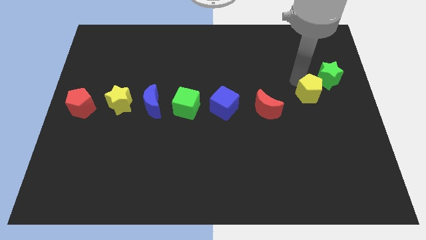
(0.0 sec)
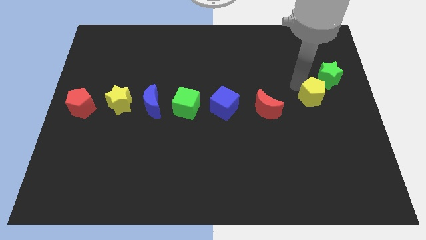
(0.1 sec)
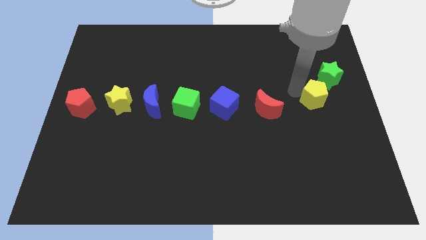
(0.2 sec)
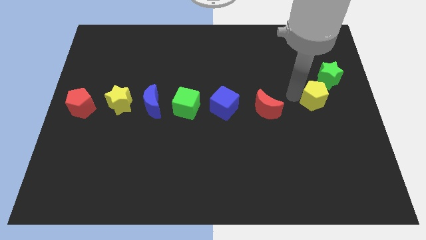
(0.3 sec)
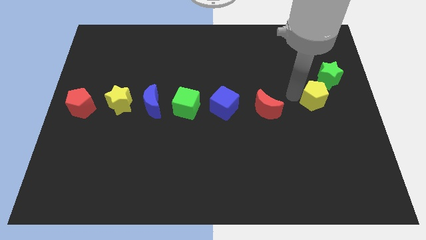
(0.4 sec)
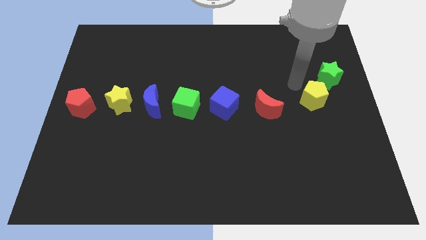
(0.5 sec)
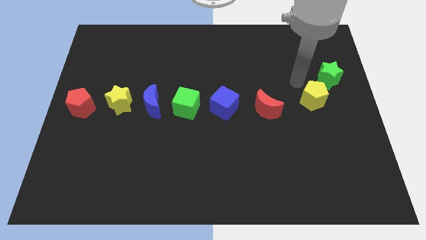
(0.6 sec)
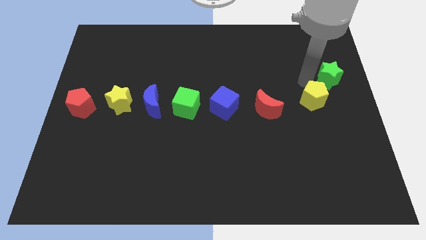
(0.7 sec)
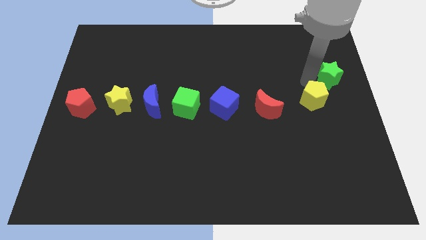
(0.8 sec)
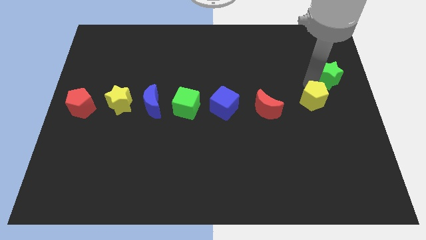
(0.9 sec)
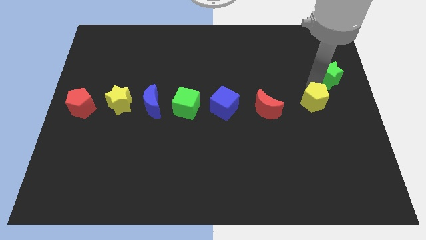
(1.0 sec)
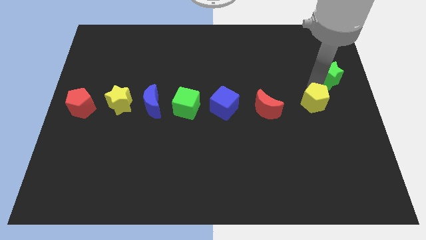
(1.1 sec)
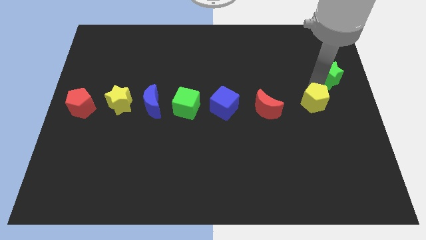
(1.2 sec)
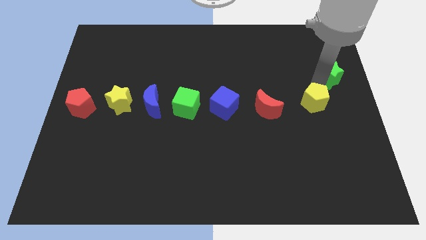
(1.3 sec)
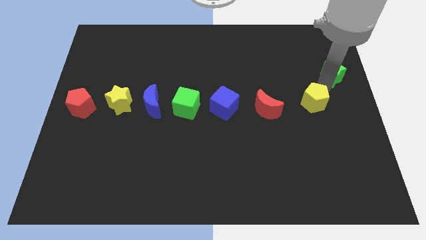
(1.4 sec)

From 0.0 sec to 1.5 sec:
place the yellow pentagon to the right side of red moon

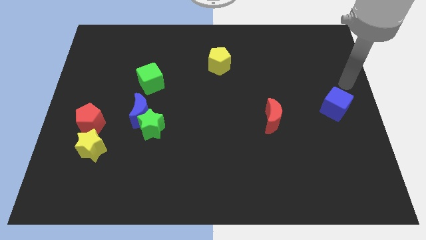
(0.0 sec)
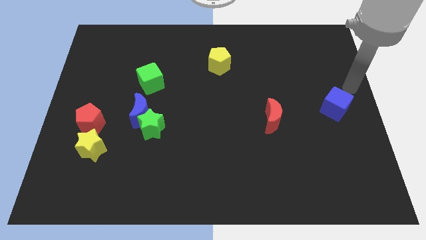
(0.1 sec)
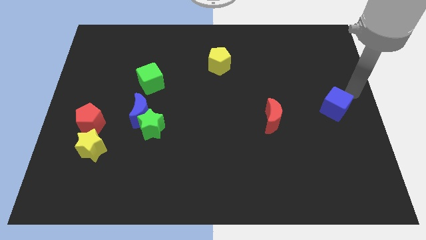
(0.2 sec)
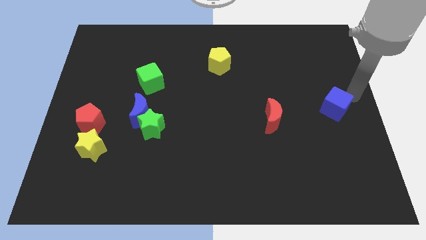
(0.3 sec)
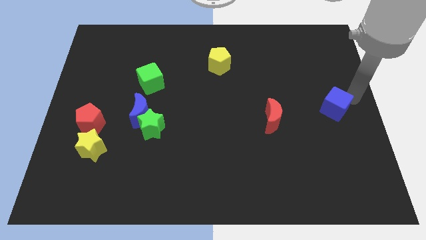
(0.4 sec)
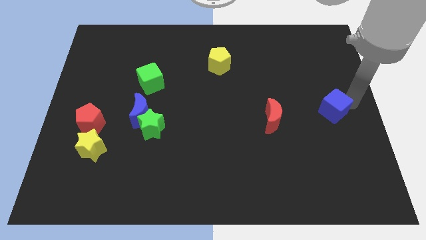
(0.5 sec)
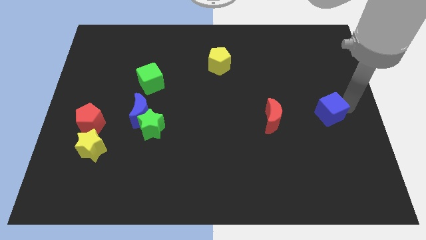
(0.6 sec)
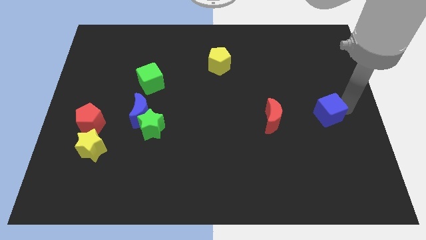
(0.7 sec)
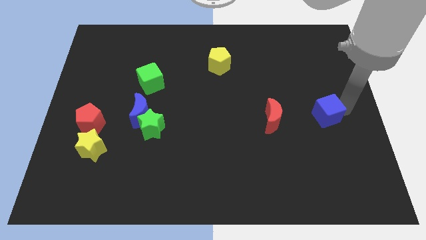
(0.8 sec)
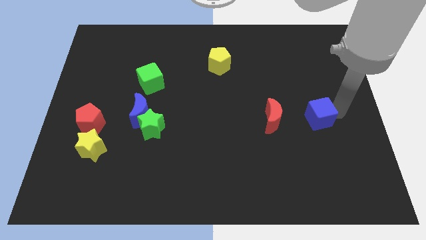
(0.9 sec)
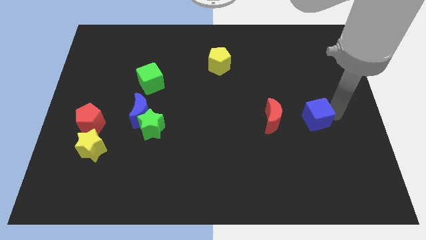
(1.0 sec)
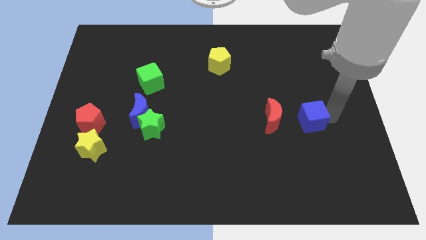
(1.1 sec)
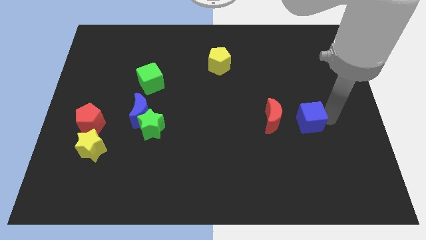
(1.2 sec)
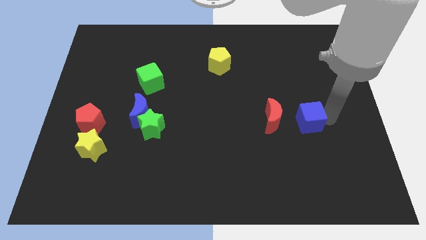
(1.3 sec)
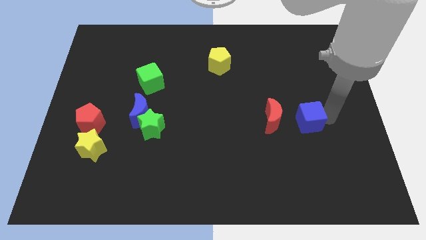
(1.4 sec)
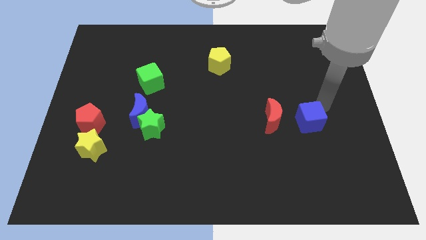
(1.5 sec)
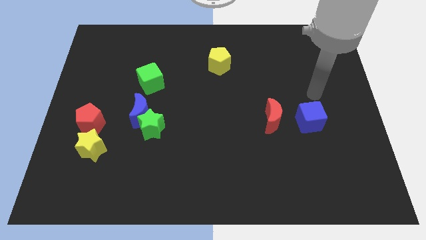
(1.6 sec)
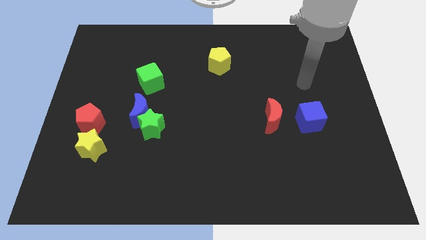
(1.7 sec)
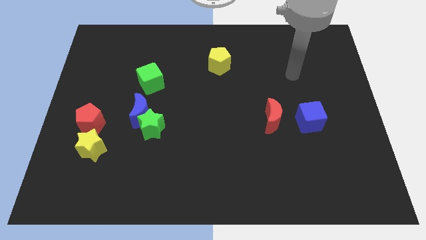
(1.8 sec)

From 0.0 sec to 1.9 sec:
move the blue cube at the right side of the red moon

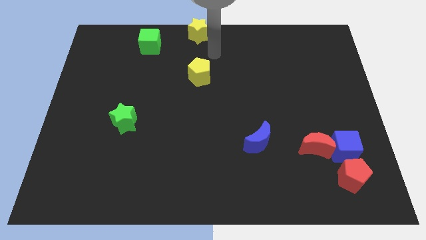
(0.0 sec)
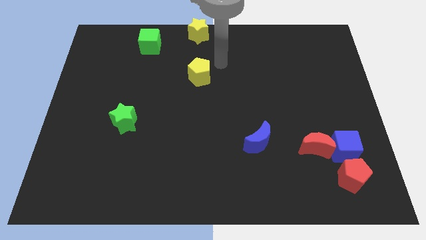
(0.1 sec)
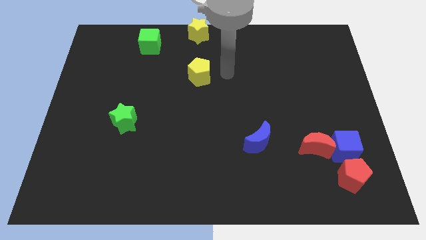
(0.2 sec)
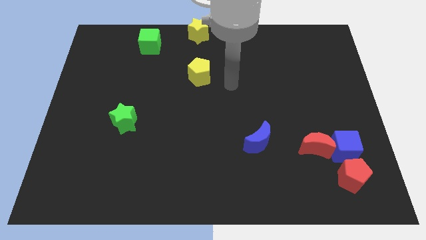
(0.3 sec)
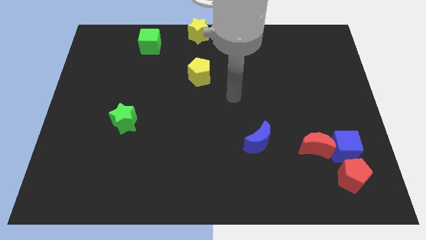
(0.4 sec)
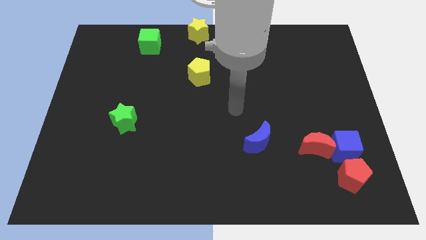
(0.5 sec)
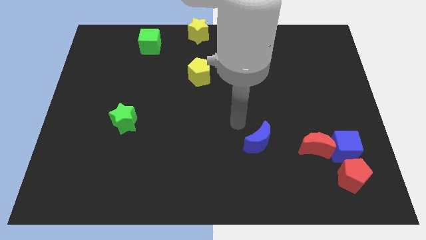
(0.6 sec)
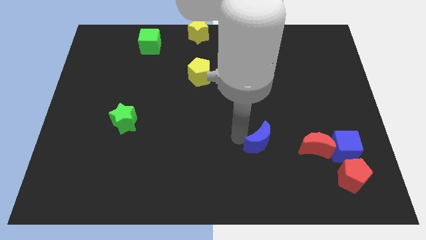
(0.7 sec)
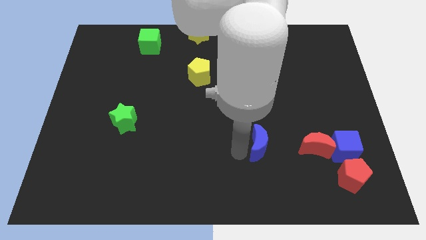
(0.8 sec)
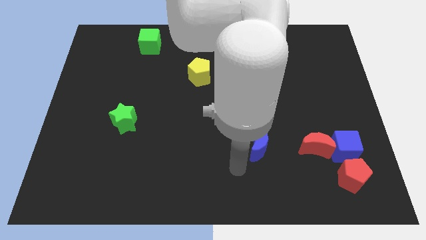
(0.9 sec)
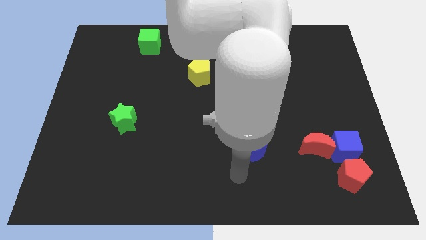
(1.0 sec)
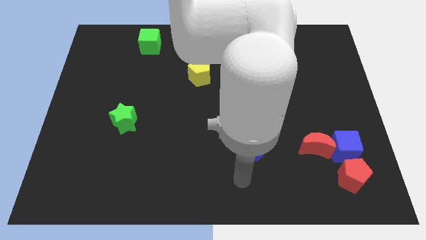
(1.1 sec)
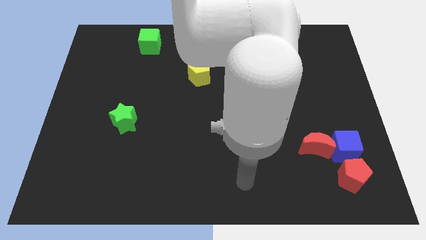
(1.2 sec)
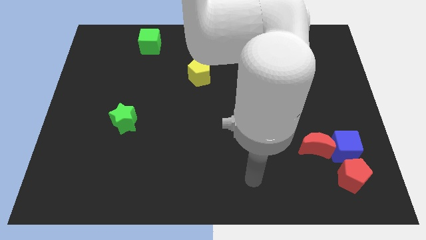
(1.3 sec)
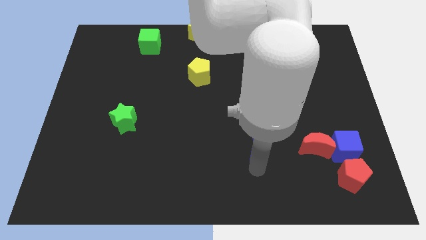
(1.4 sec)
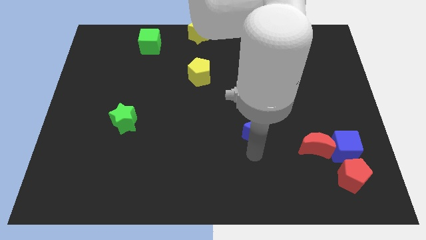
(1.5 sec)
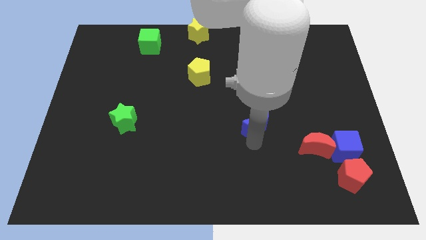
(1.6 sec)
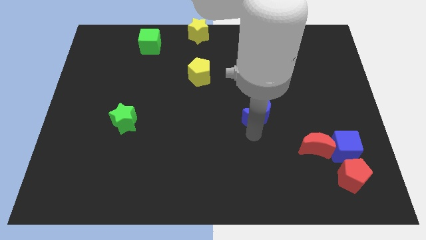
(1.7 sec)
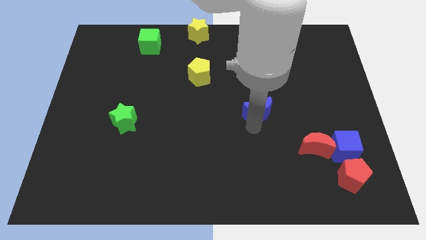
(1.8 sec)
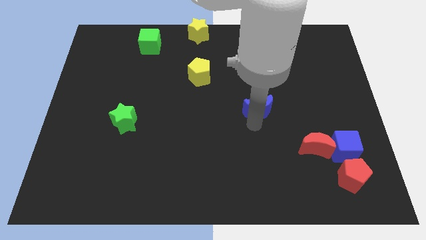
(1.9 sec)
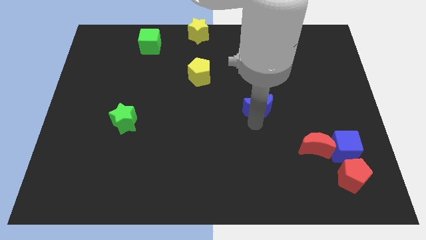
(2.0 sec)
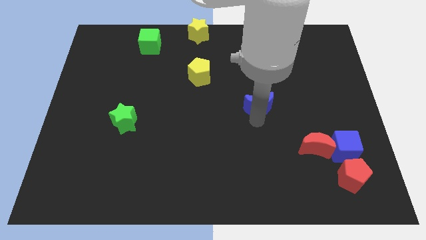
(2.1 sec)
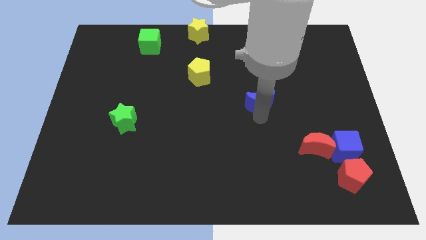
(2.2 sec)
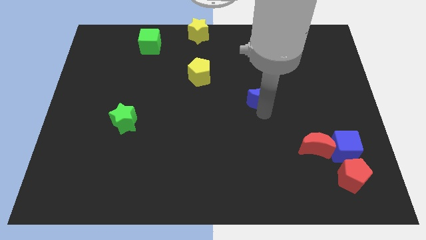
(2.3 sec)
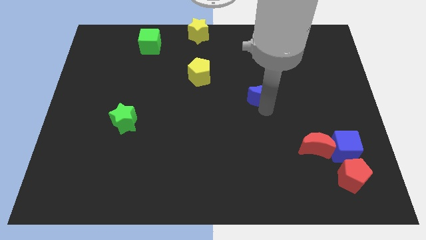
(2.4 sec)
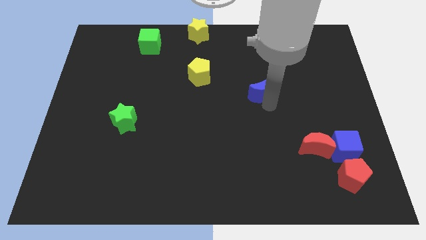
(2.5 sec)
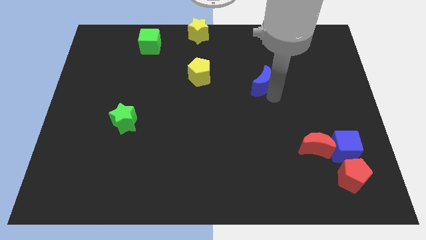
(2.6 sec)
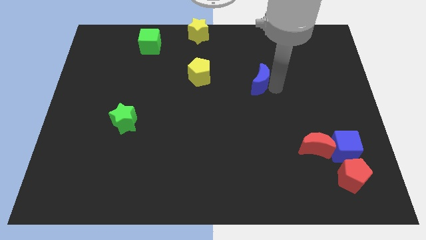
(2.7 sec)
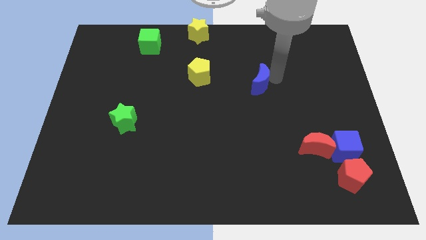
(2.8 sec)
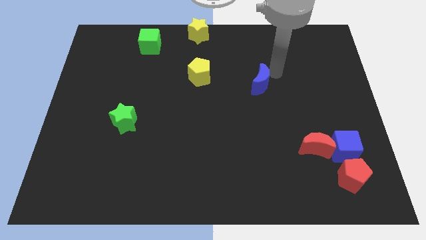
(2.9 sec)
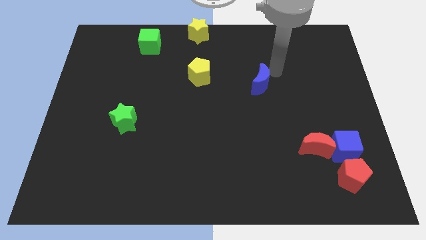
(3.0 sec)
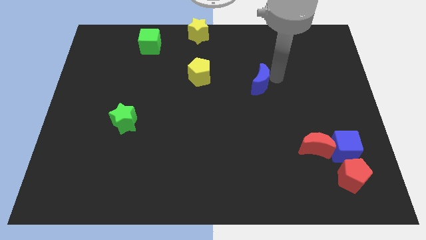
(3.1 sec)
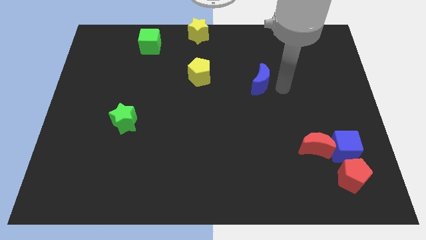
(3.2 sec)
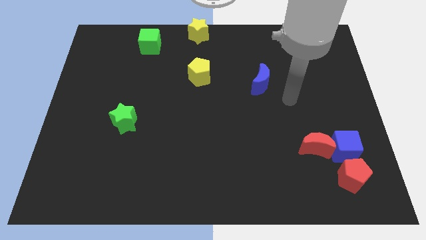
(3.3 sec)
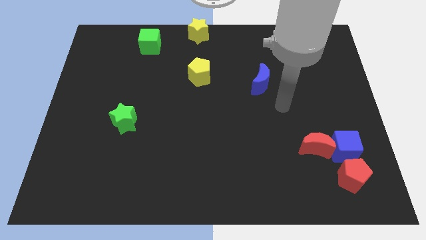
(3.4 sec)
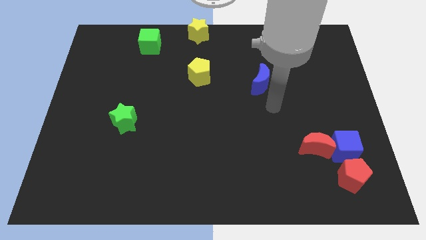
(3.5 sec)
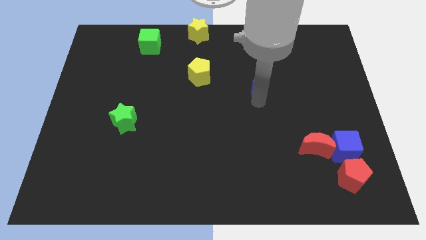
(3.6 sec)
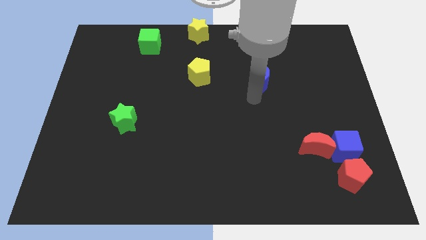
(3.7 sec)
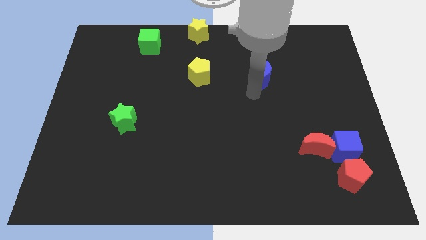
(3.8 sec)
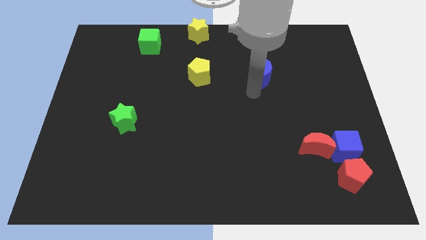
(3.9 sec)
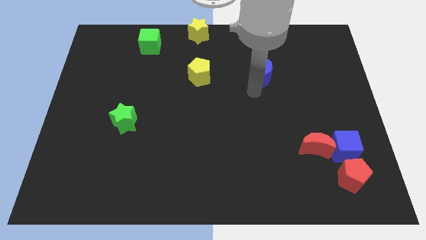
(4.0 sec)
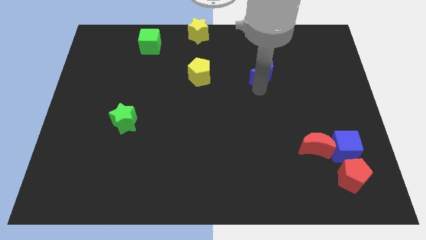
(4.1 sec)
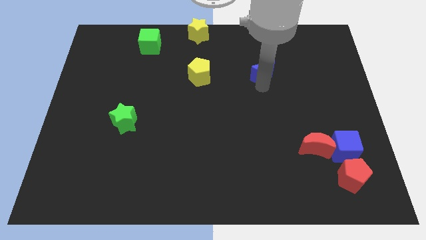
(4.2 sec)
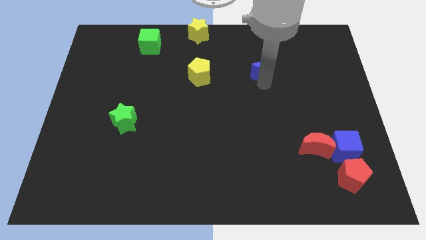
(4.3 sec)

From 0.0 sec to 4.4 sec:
place the blue crescent horizontal to the yellow pentagon

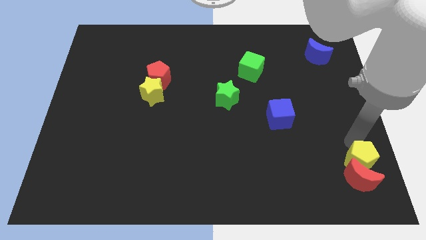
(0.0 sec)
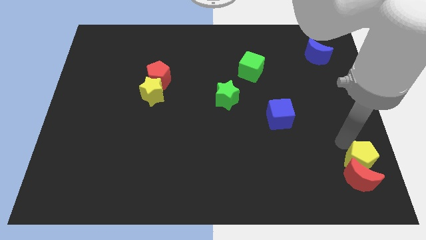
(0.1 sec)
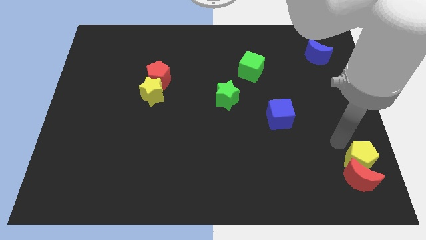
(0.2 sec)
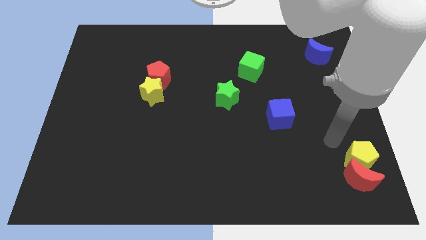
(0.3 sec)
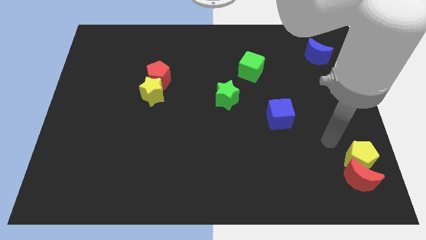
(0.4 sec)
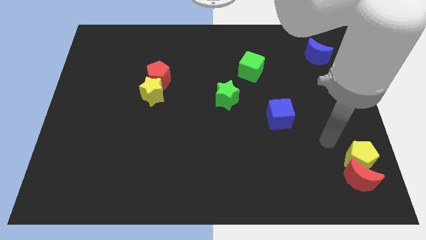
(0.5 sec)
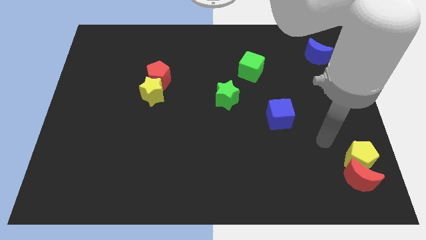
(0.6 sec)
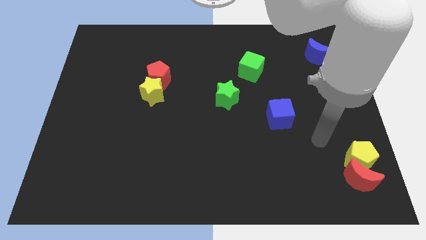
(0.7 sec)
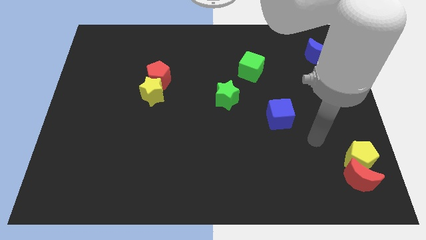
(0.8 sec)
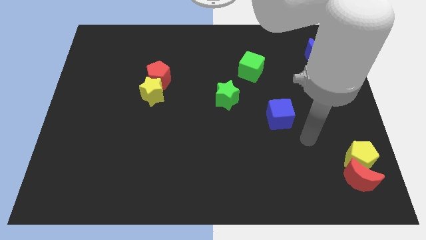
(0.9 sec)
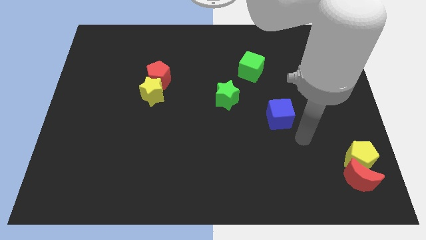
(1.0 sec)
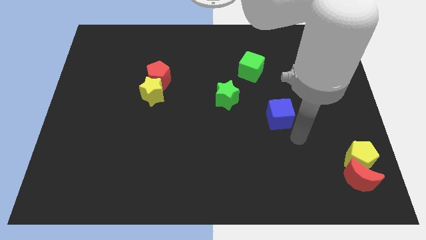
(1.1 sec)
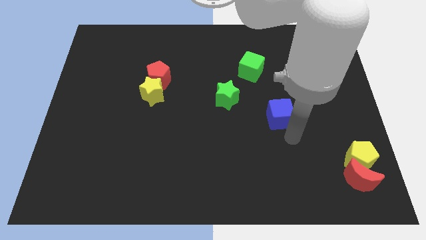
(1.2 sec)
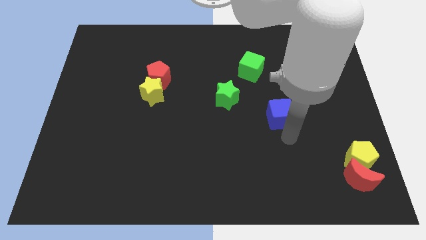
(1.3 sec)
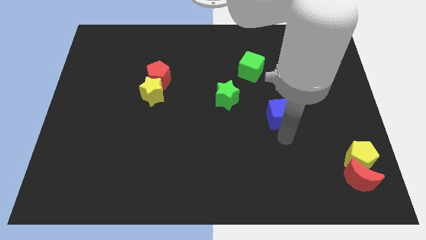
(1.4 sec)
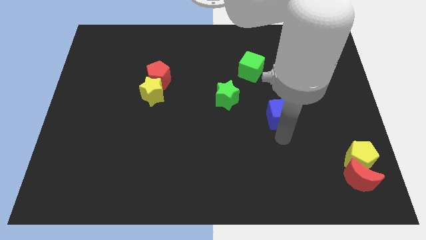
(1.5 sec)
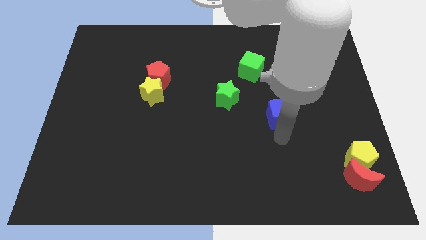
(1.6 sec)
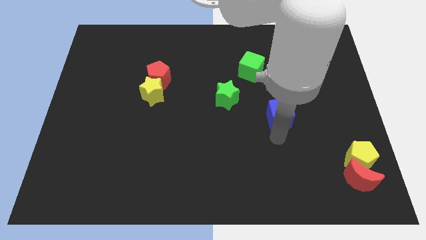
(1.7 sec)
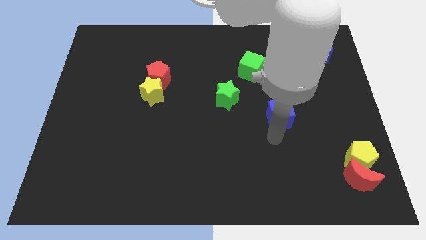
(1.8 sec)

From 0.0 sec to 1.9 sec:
push the yellow pentagon into the red crescent
